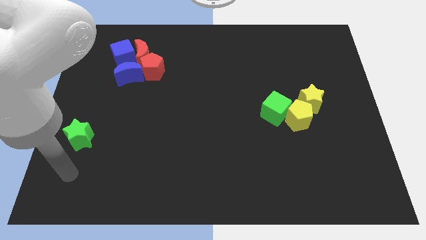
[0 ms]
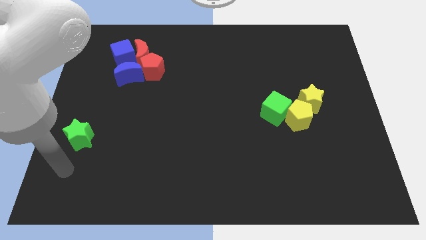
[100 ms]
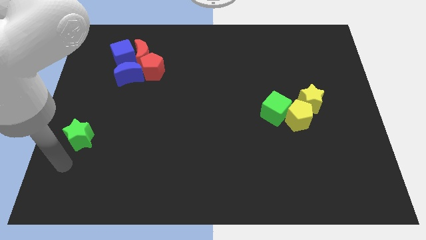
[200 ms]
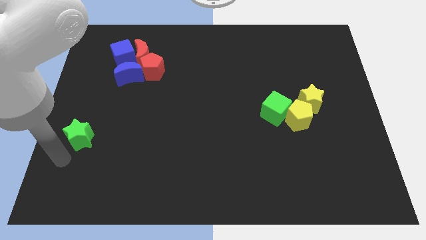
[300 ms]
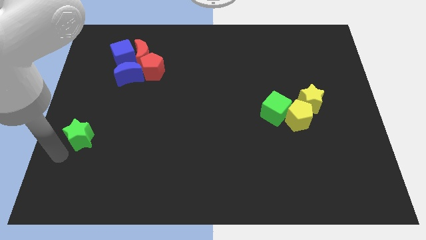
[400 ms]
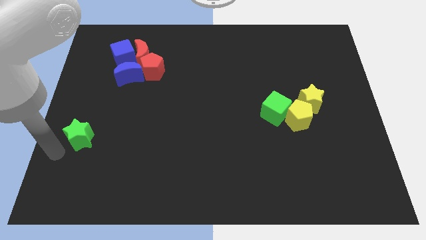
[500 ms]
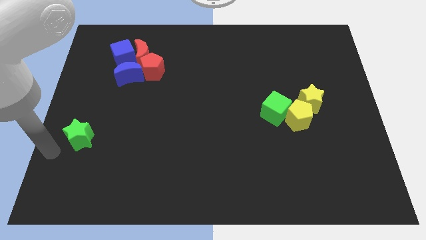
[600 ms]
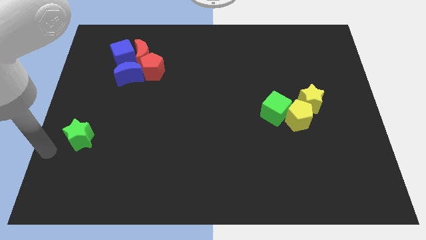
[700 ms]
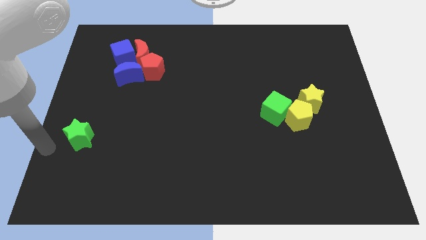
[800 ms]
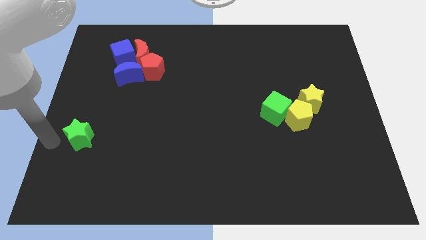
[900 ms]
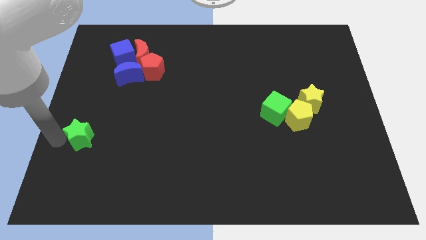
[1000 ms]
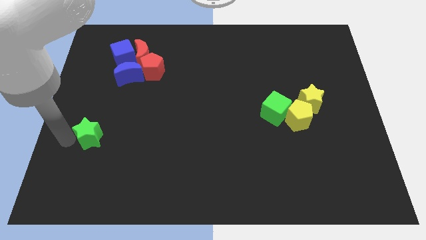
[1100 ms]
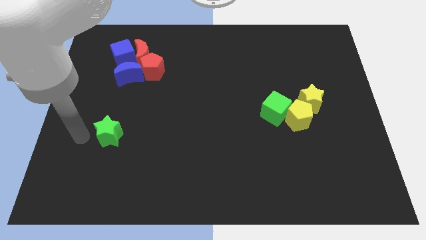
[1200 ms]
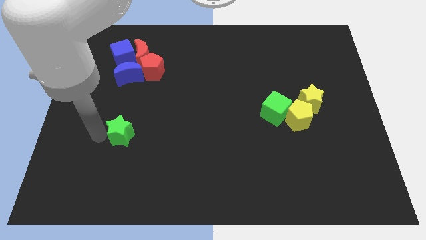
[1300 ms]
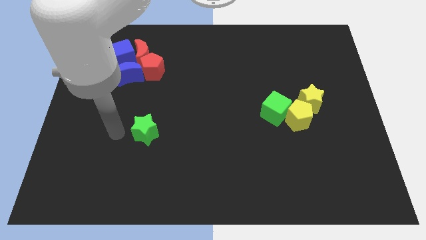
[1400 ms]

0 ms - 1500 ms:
push the green star to the right side

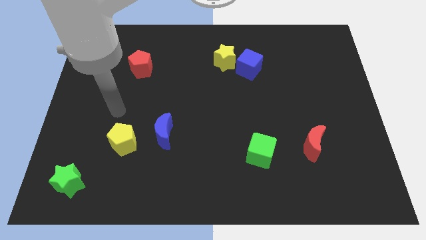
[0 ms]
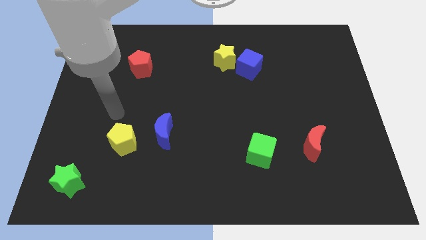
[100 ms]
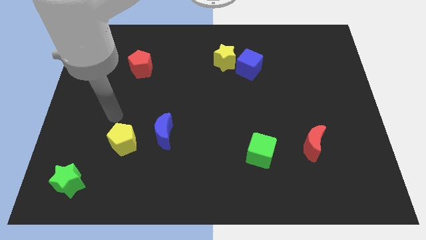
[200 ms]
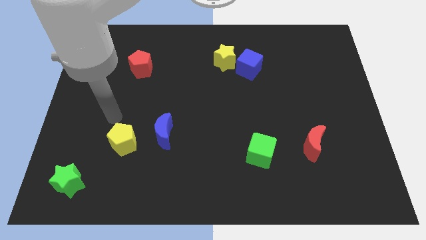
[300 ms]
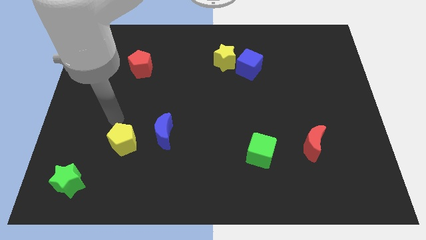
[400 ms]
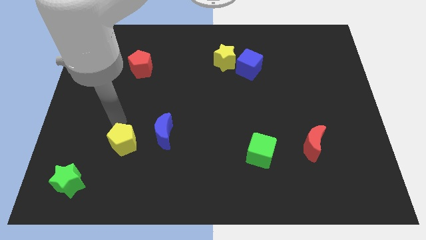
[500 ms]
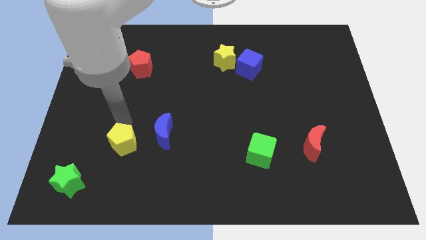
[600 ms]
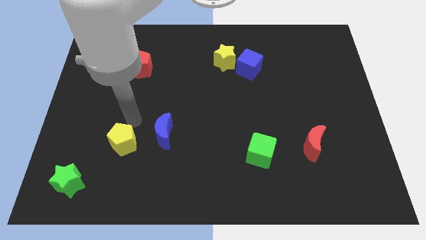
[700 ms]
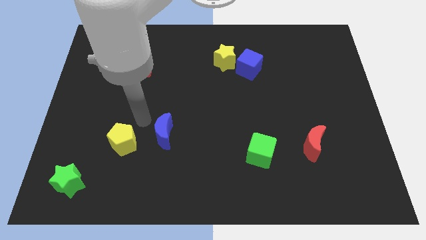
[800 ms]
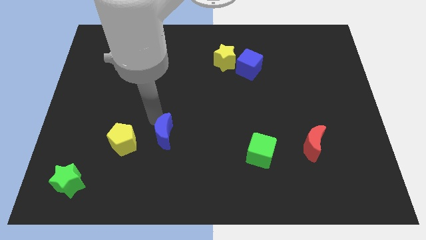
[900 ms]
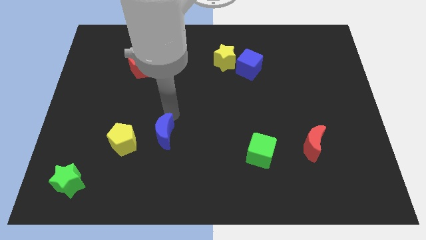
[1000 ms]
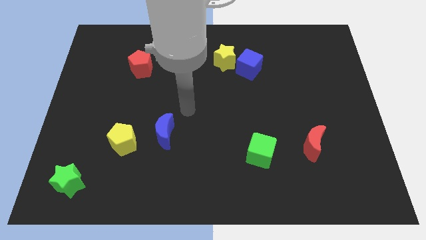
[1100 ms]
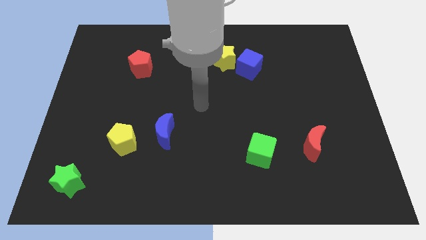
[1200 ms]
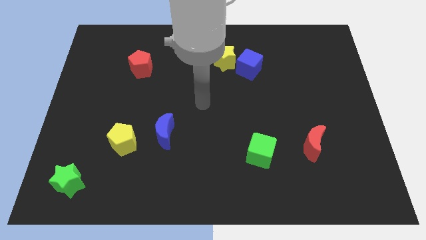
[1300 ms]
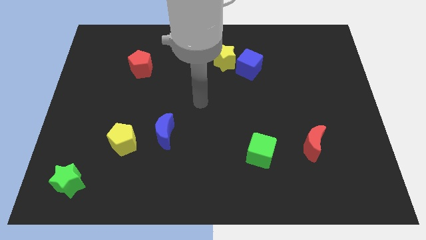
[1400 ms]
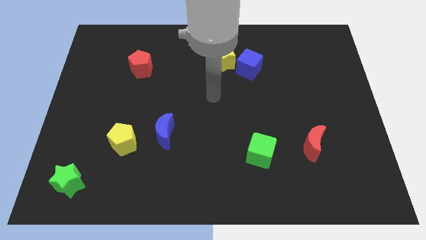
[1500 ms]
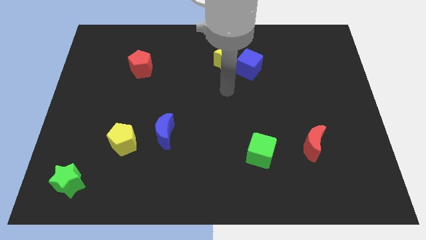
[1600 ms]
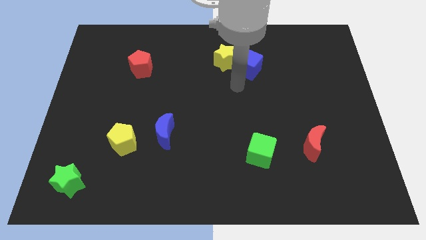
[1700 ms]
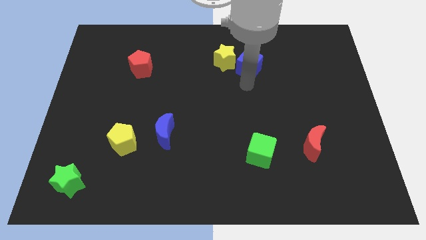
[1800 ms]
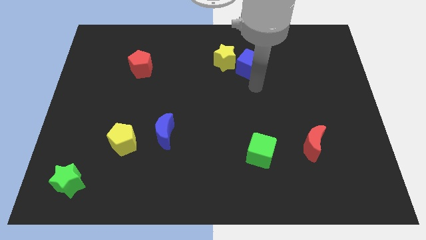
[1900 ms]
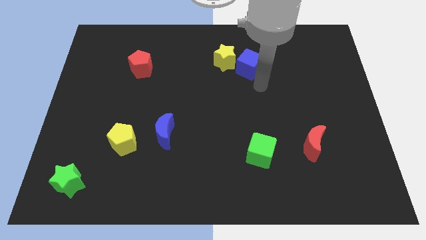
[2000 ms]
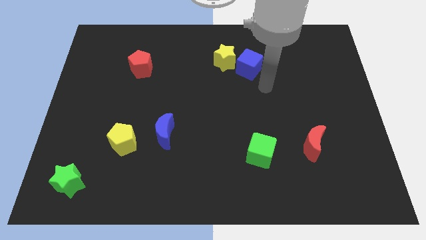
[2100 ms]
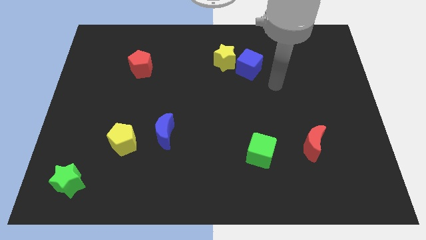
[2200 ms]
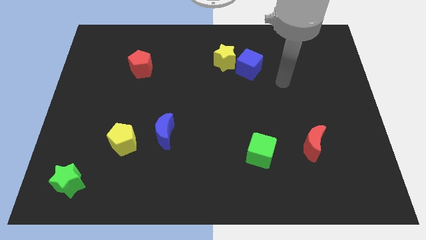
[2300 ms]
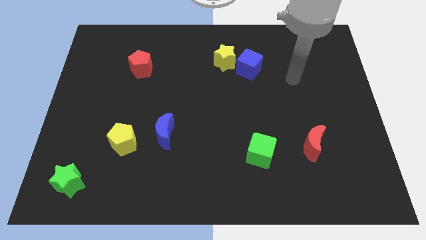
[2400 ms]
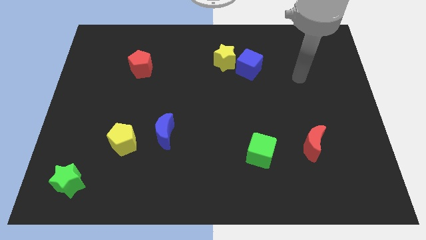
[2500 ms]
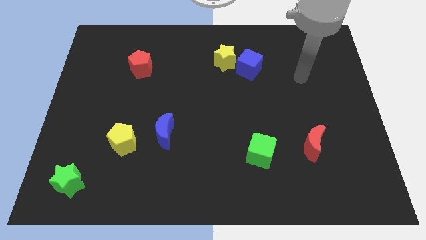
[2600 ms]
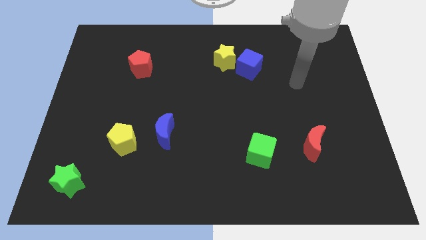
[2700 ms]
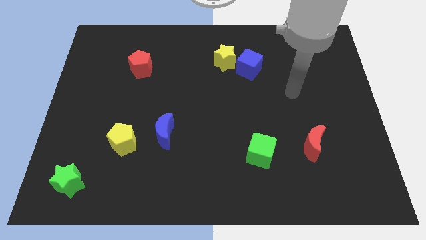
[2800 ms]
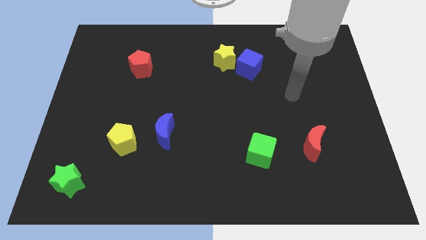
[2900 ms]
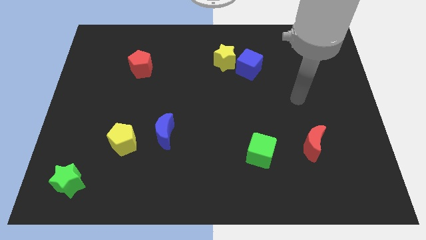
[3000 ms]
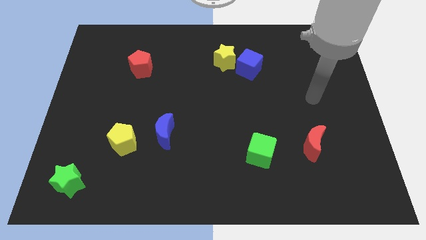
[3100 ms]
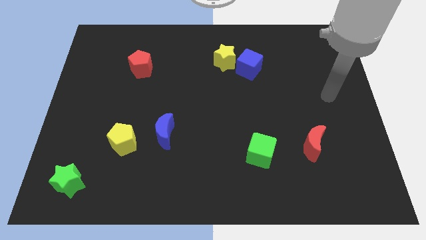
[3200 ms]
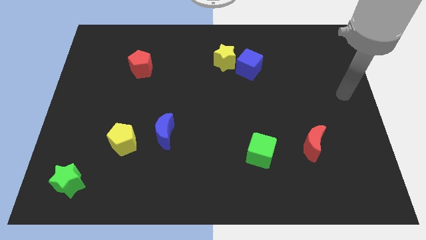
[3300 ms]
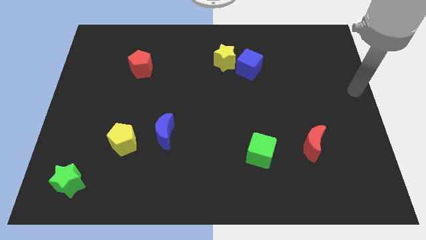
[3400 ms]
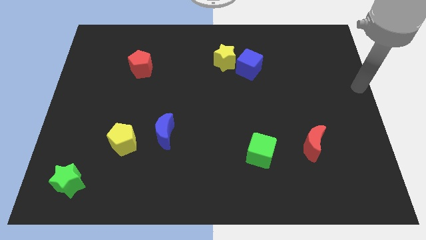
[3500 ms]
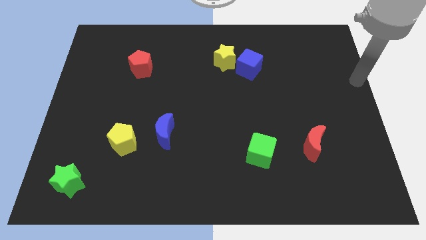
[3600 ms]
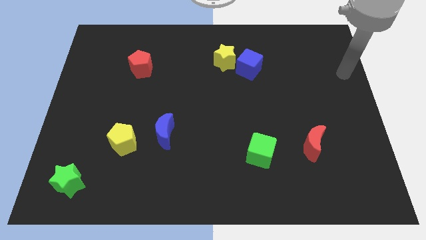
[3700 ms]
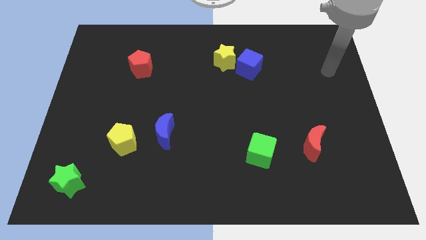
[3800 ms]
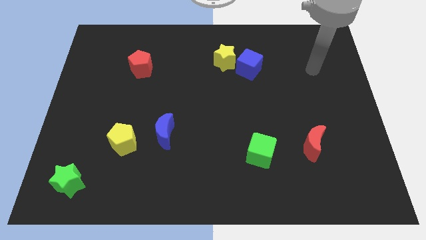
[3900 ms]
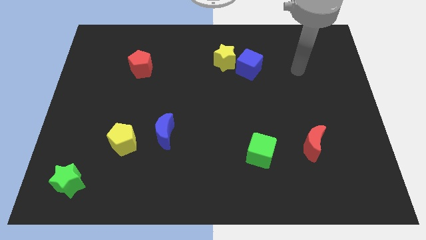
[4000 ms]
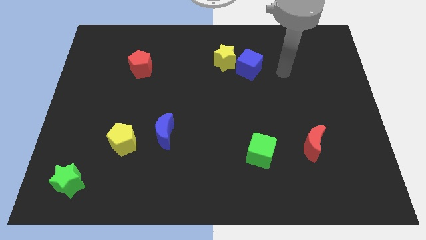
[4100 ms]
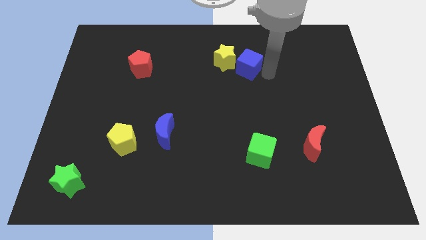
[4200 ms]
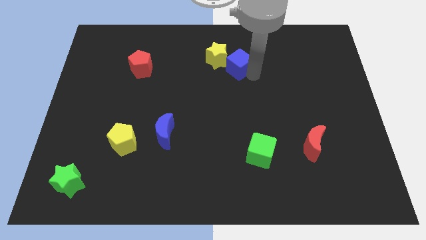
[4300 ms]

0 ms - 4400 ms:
move your arm towards the blue cube

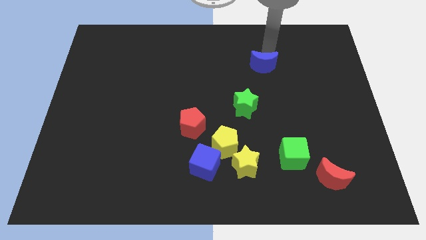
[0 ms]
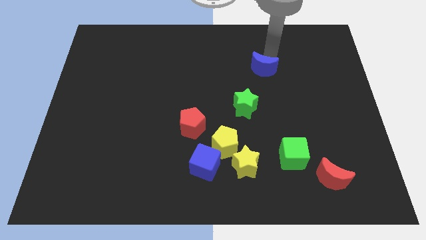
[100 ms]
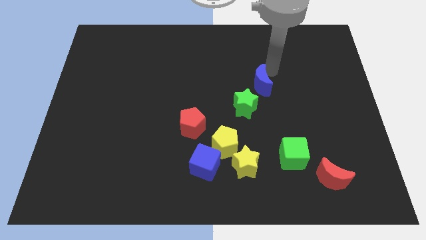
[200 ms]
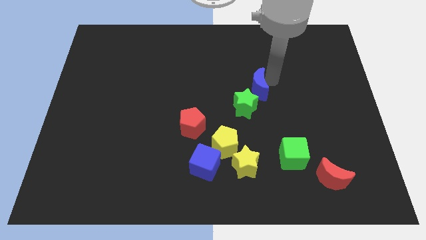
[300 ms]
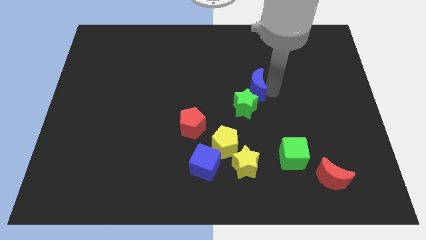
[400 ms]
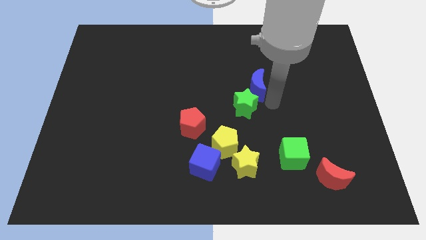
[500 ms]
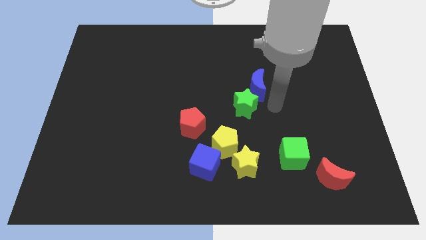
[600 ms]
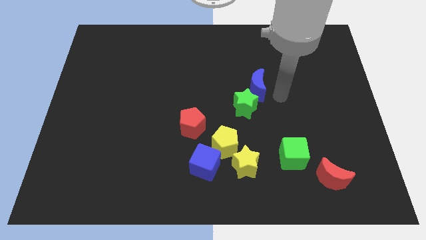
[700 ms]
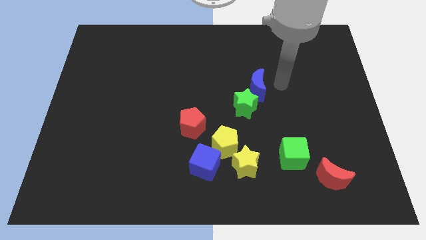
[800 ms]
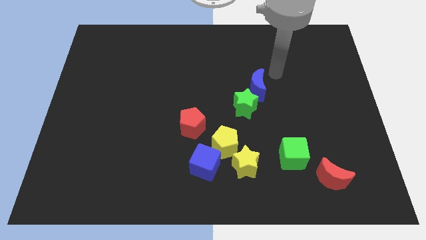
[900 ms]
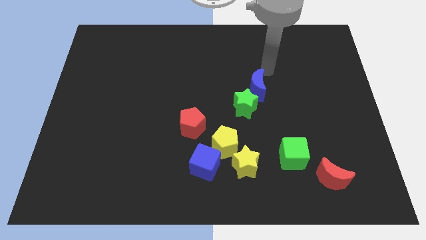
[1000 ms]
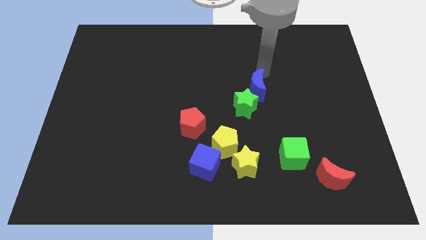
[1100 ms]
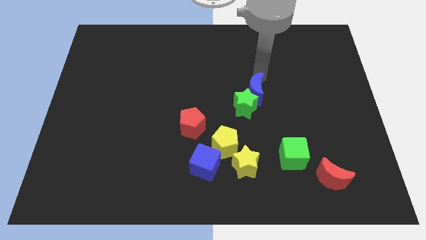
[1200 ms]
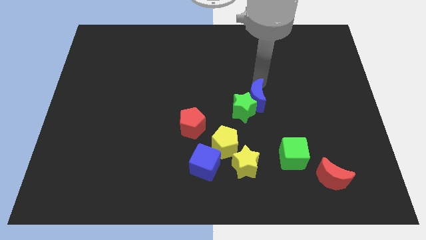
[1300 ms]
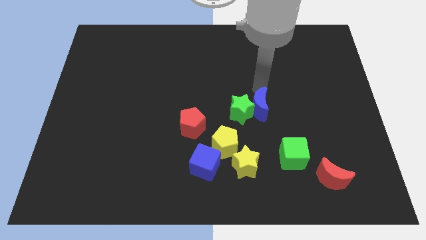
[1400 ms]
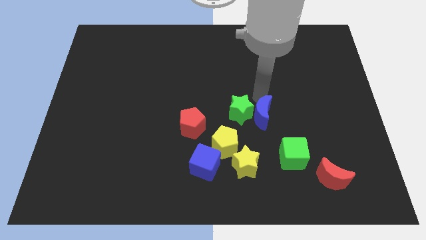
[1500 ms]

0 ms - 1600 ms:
move the blue moon into green star

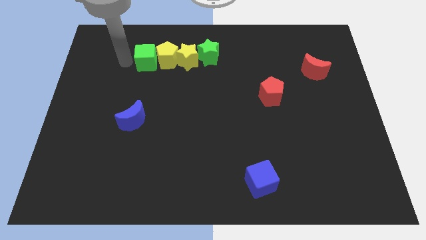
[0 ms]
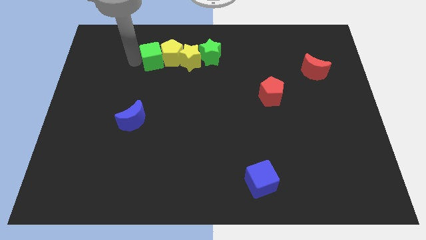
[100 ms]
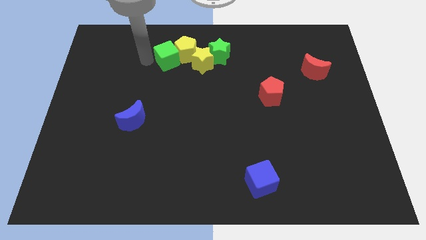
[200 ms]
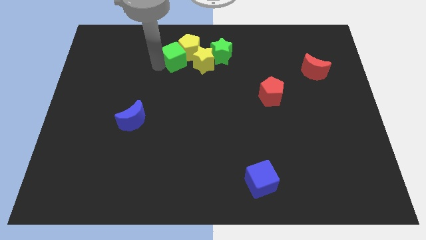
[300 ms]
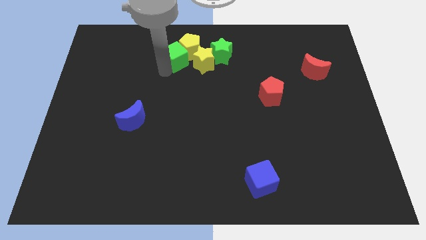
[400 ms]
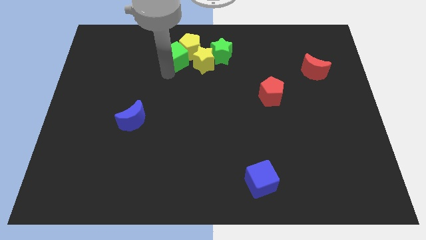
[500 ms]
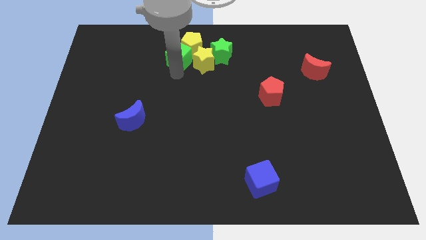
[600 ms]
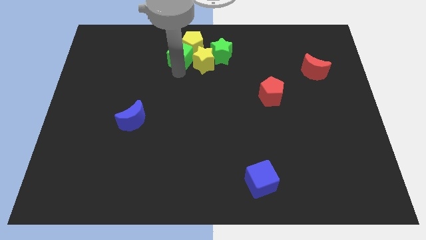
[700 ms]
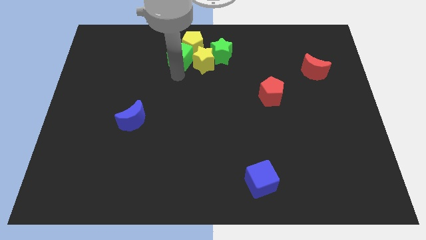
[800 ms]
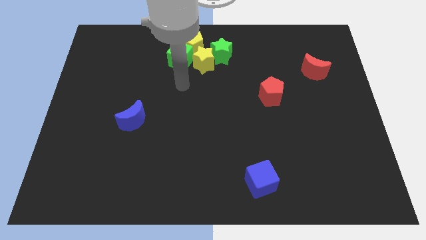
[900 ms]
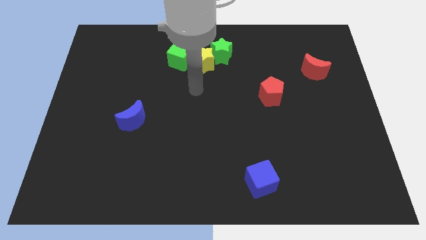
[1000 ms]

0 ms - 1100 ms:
move green cube to the left of yellow star

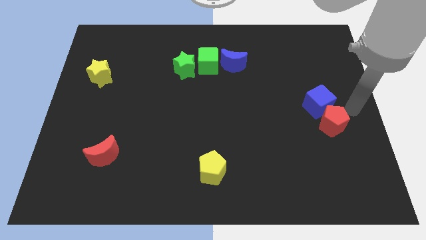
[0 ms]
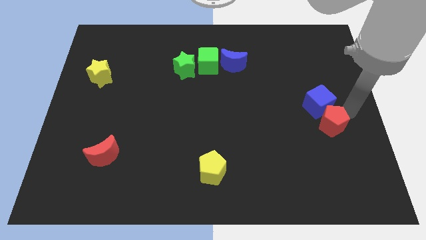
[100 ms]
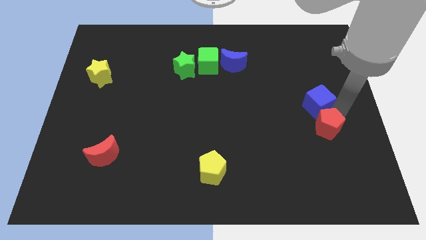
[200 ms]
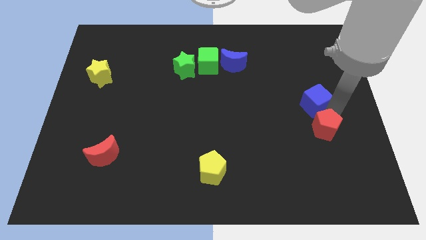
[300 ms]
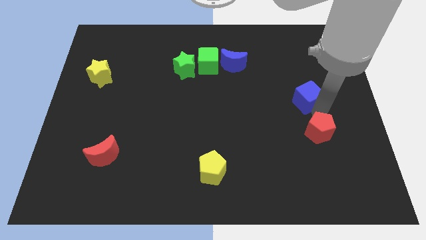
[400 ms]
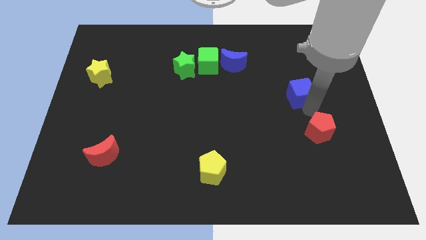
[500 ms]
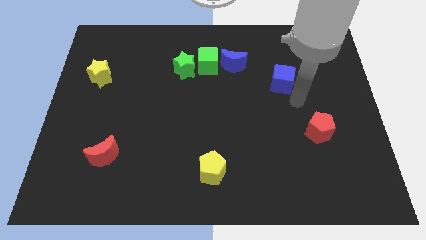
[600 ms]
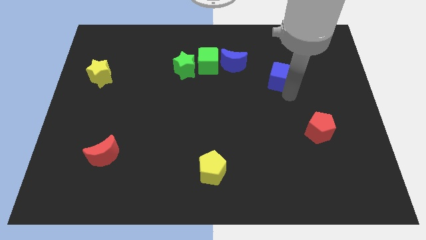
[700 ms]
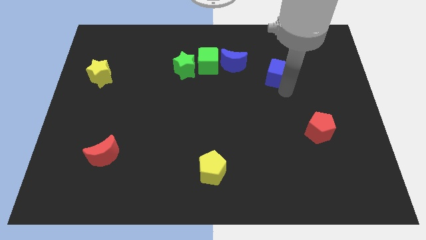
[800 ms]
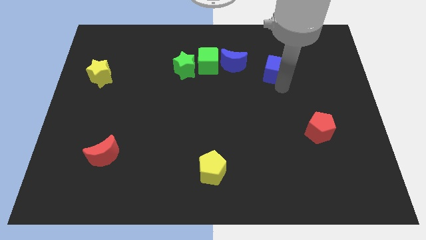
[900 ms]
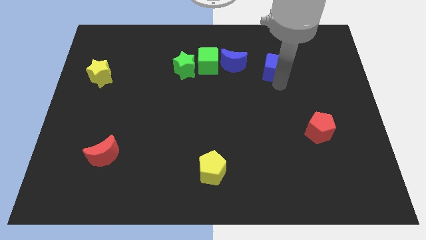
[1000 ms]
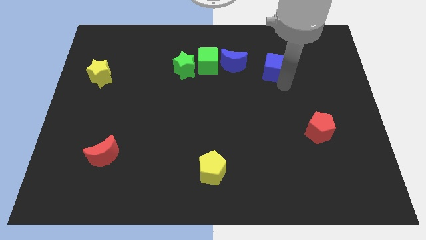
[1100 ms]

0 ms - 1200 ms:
separate the blue cube from the red pentagon
